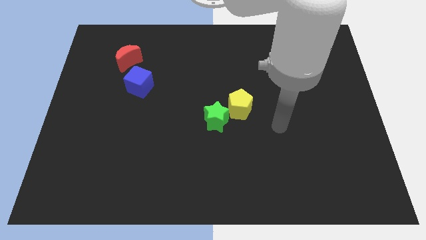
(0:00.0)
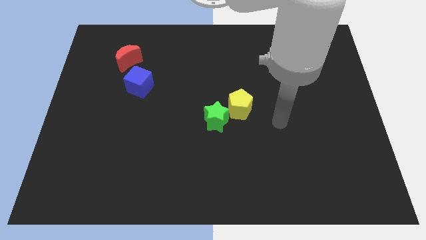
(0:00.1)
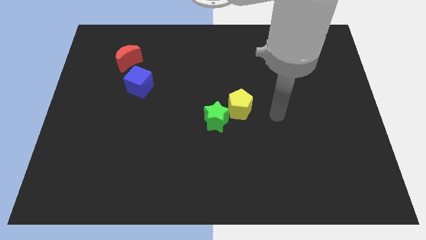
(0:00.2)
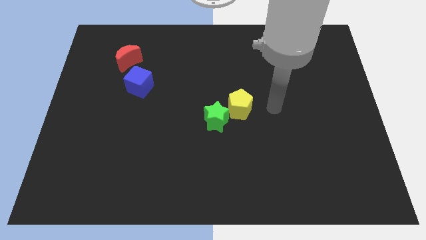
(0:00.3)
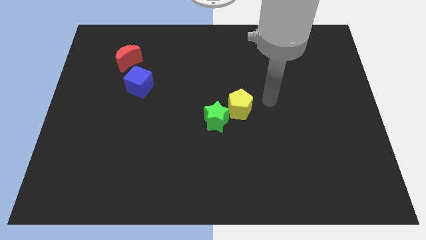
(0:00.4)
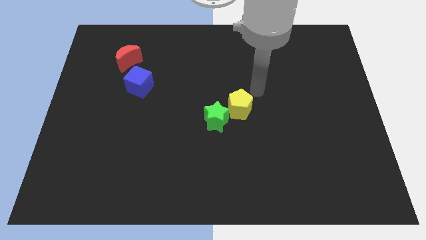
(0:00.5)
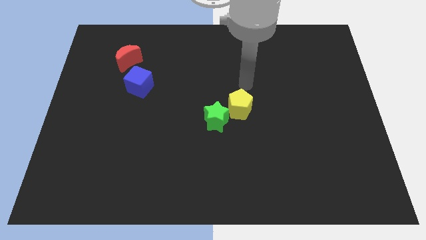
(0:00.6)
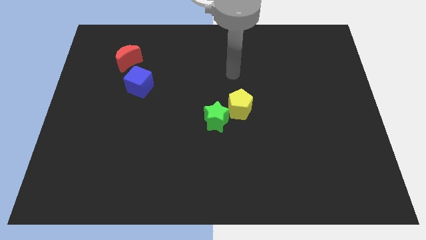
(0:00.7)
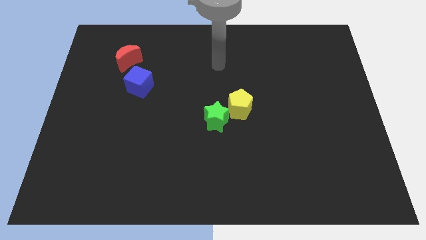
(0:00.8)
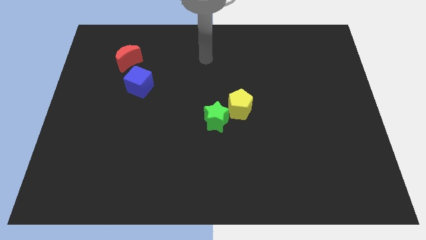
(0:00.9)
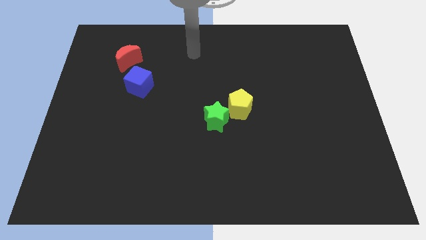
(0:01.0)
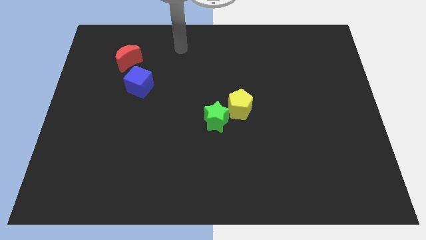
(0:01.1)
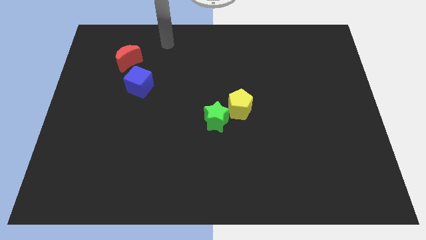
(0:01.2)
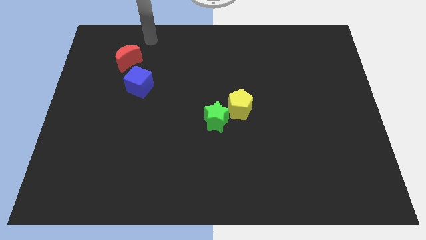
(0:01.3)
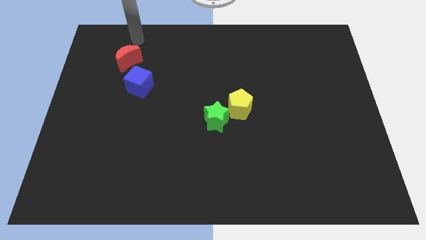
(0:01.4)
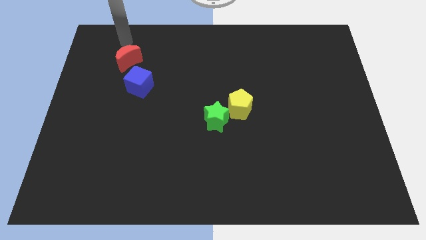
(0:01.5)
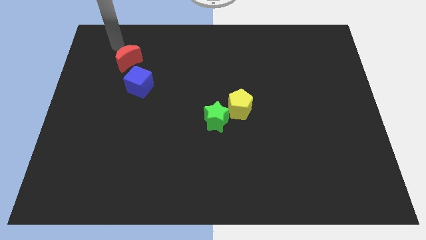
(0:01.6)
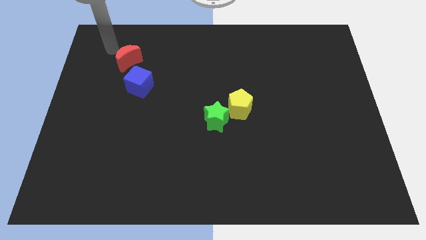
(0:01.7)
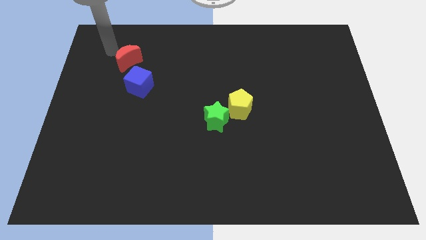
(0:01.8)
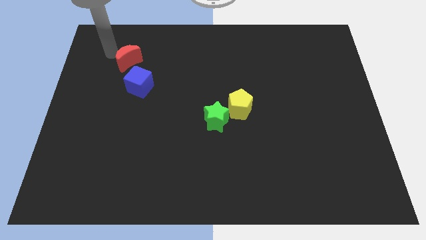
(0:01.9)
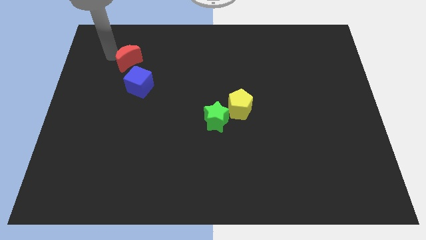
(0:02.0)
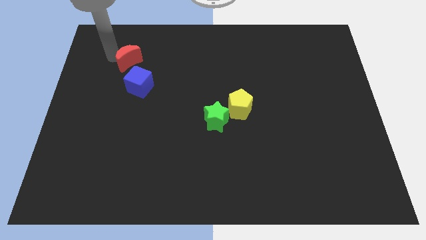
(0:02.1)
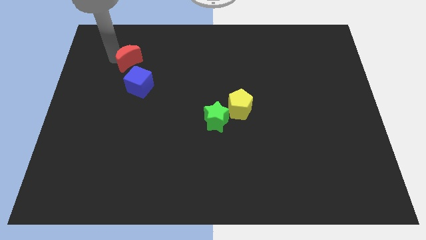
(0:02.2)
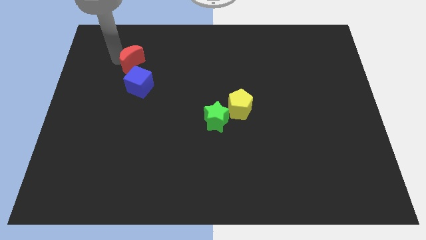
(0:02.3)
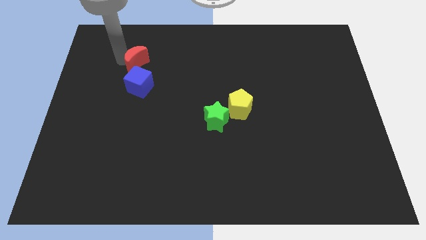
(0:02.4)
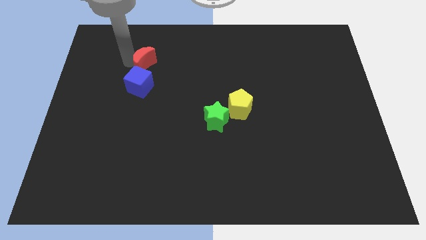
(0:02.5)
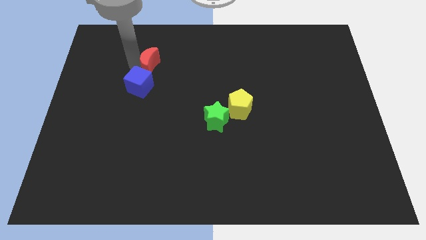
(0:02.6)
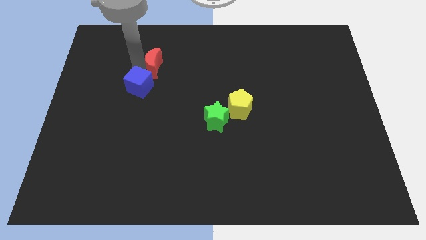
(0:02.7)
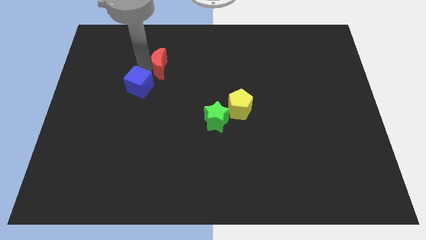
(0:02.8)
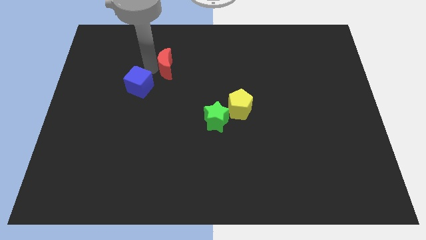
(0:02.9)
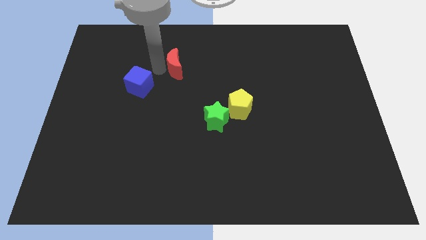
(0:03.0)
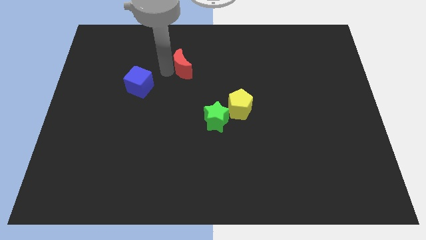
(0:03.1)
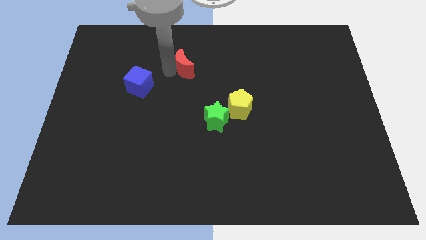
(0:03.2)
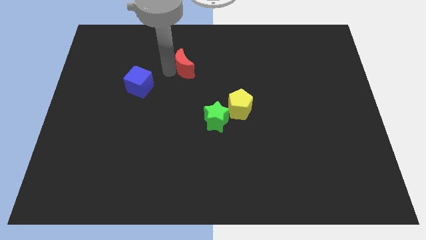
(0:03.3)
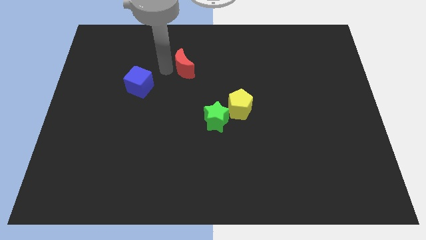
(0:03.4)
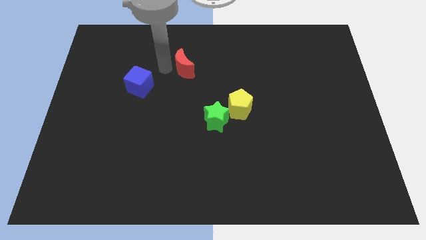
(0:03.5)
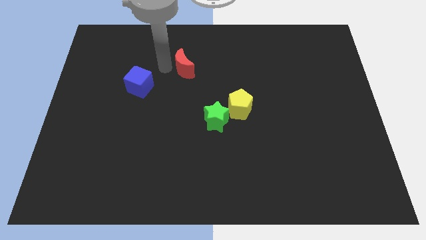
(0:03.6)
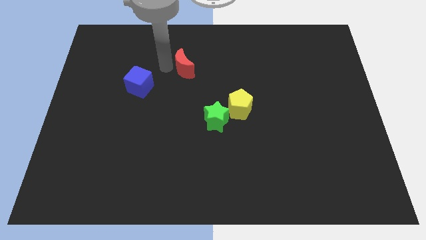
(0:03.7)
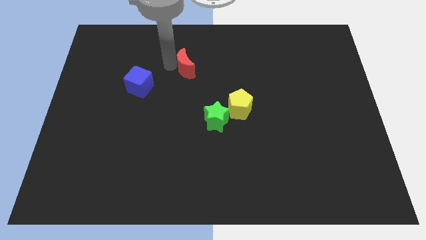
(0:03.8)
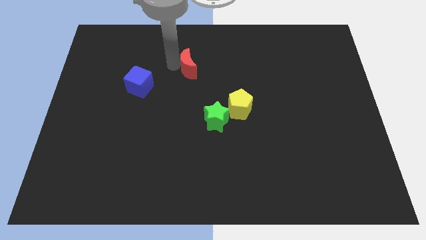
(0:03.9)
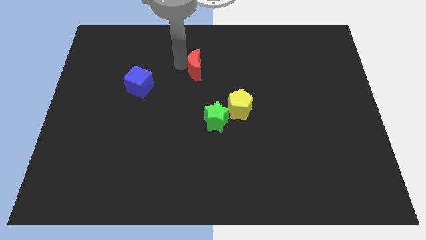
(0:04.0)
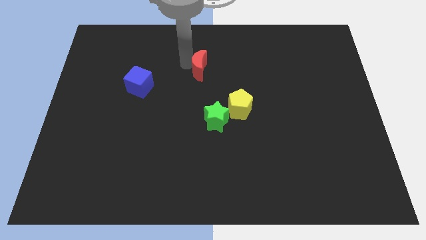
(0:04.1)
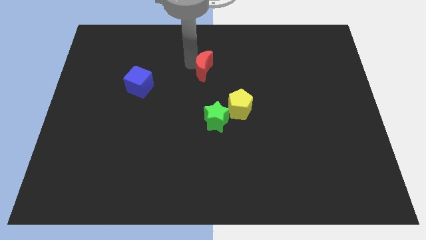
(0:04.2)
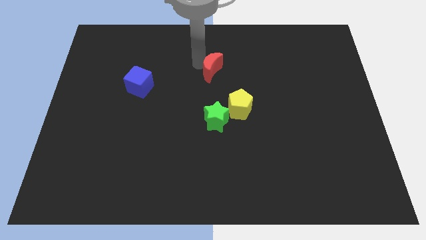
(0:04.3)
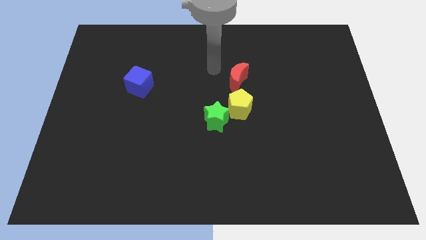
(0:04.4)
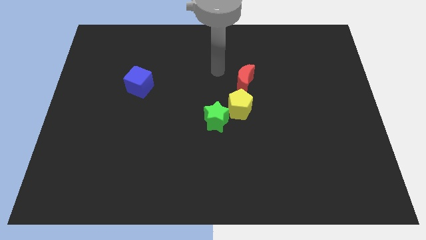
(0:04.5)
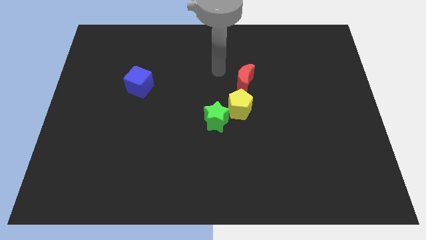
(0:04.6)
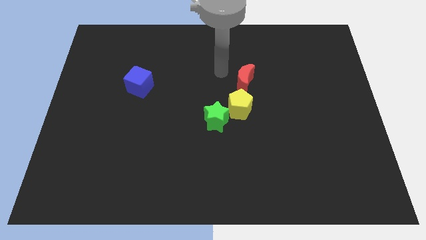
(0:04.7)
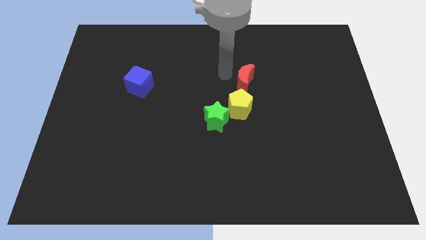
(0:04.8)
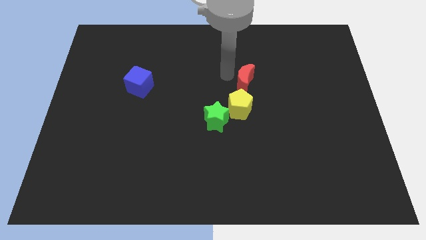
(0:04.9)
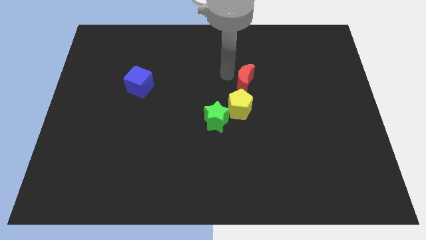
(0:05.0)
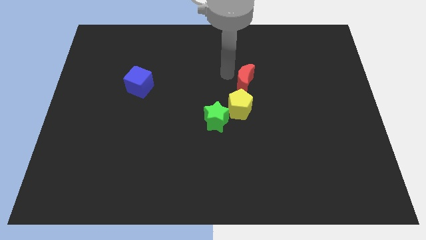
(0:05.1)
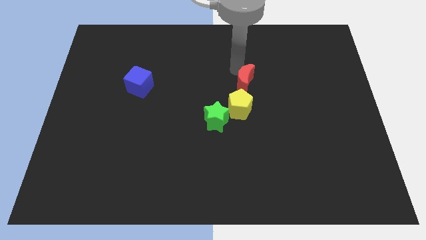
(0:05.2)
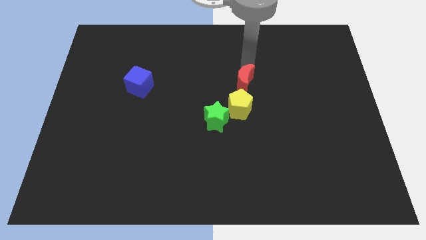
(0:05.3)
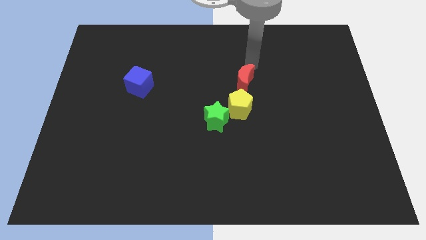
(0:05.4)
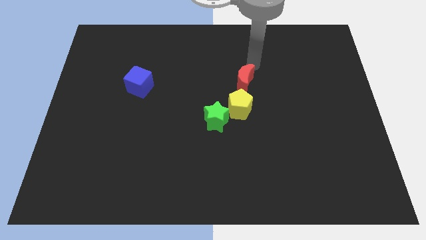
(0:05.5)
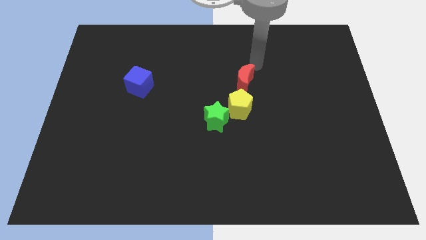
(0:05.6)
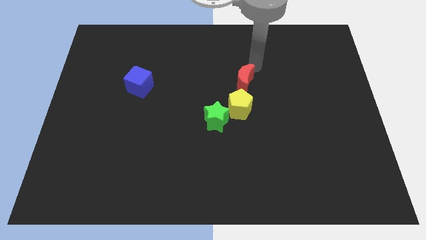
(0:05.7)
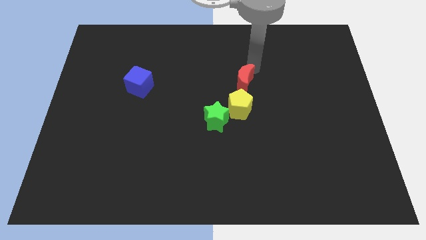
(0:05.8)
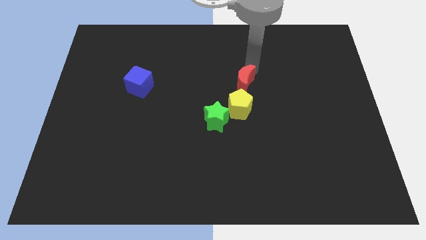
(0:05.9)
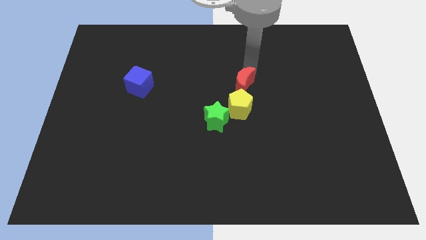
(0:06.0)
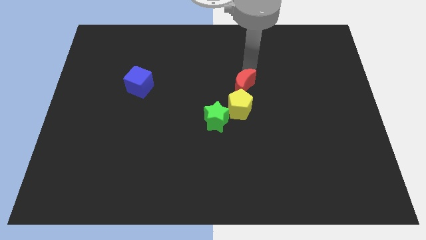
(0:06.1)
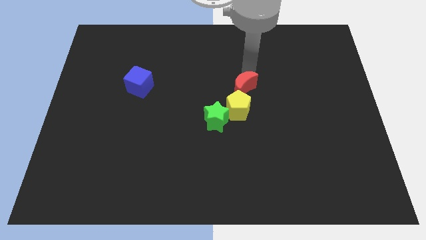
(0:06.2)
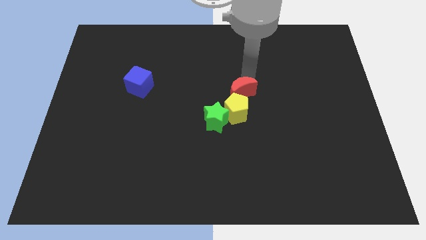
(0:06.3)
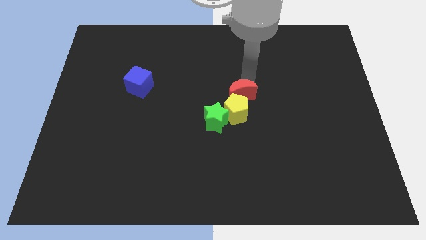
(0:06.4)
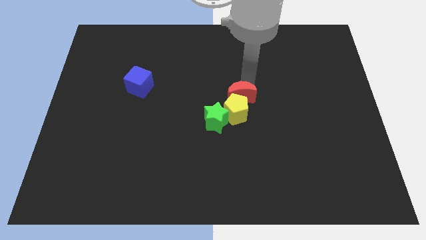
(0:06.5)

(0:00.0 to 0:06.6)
put the red moon towards the yellow pentagon

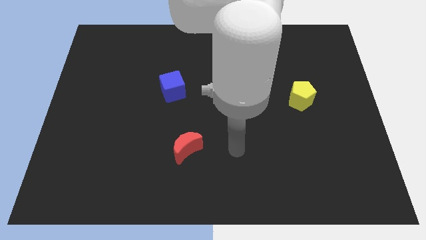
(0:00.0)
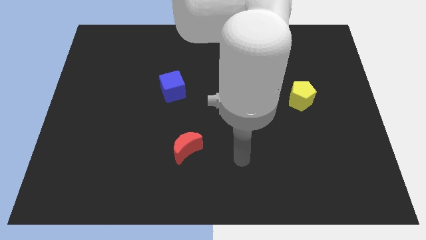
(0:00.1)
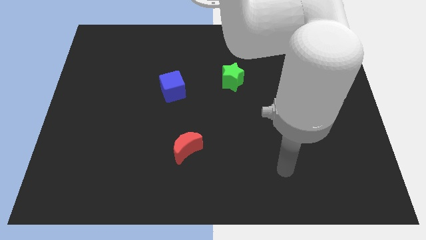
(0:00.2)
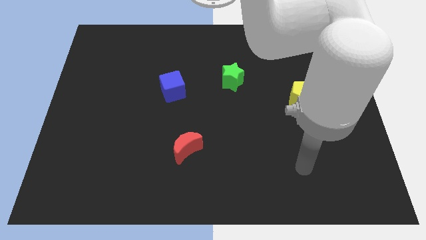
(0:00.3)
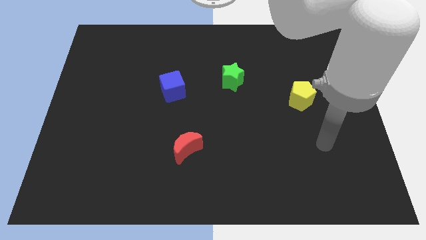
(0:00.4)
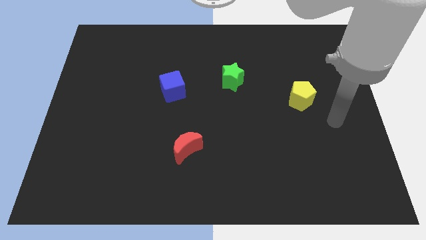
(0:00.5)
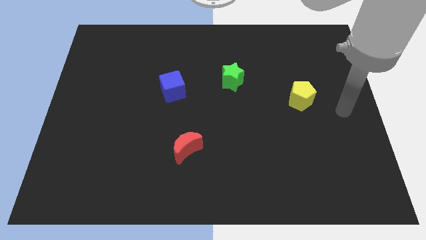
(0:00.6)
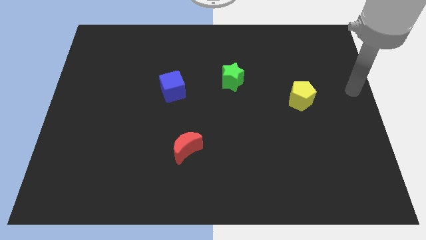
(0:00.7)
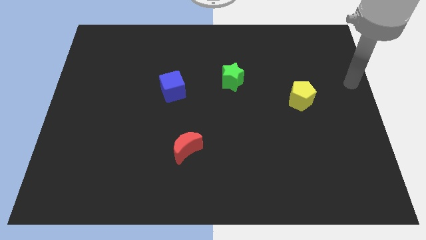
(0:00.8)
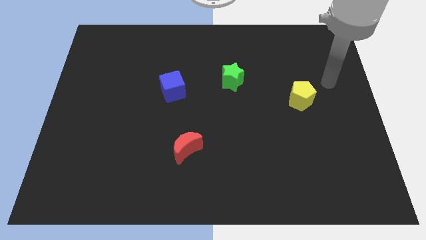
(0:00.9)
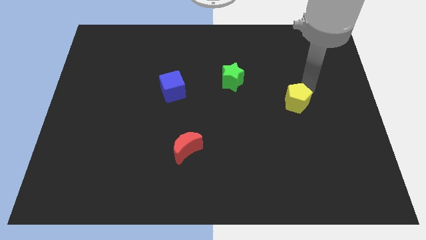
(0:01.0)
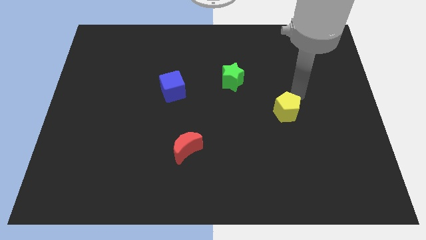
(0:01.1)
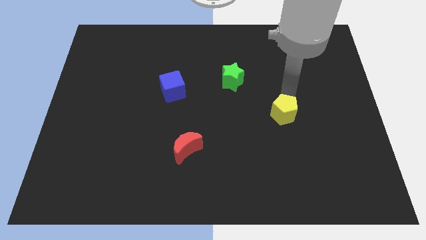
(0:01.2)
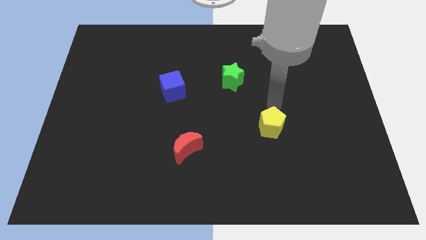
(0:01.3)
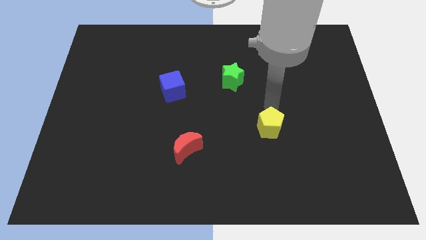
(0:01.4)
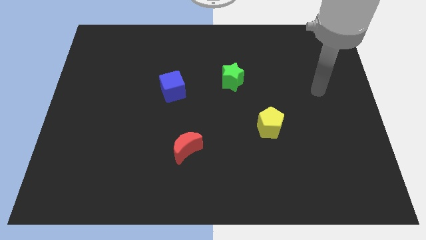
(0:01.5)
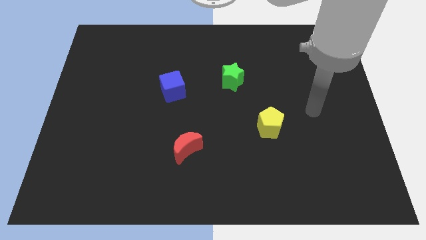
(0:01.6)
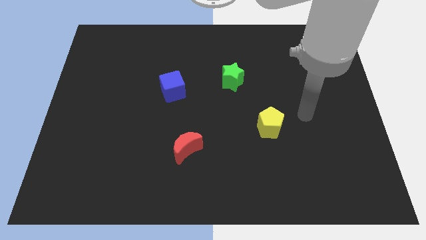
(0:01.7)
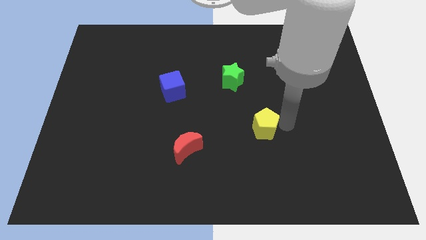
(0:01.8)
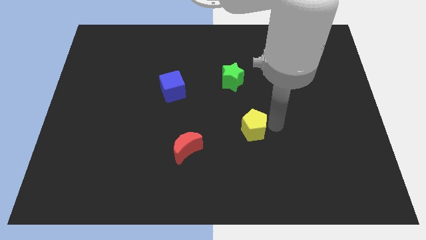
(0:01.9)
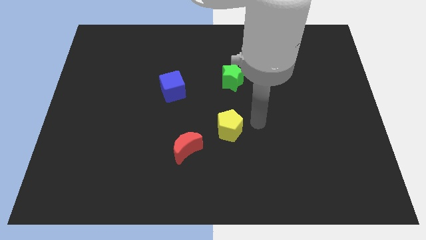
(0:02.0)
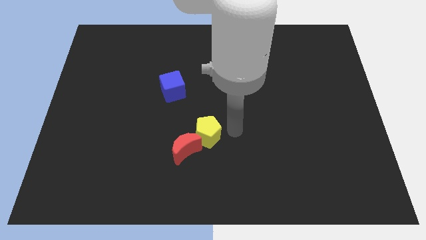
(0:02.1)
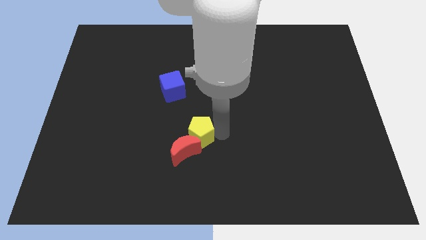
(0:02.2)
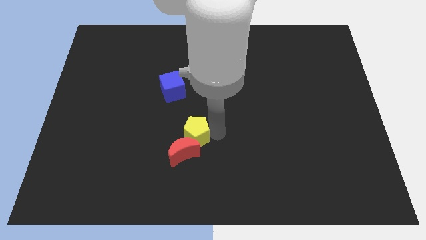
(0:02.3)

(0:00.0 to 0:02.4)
push the yellow block towards the red moon
